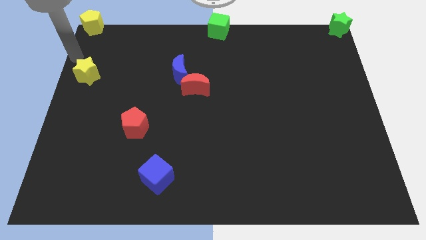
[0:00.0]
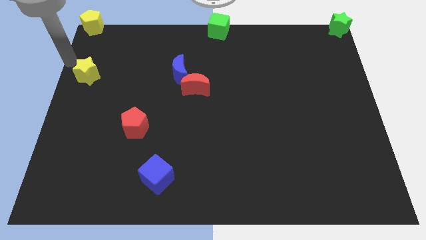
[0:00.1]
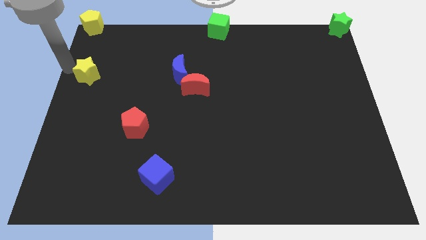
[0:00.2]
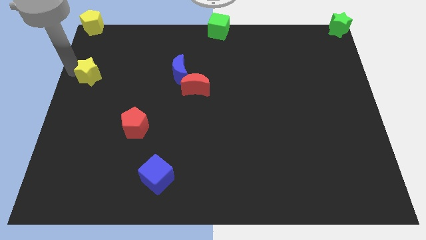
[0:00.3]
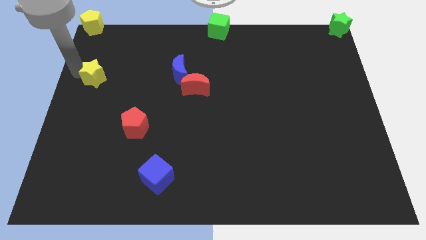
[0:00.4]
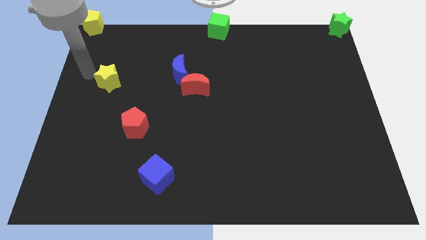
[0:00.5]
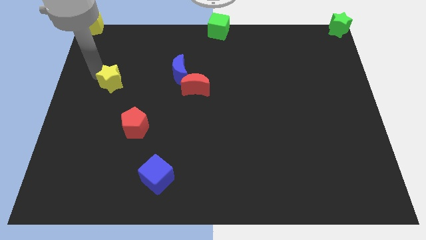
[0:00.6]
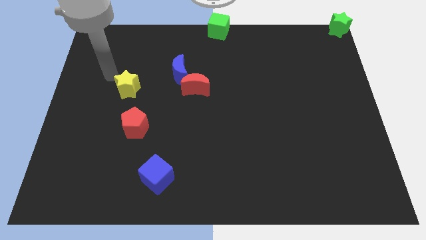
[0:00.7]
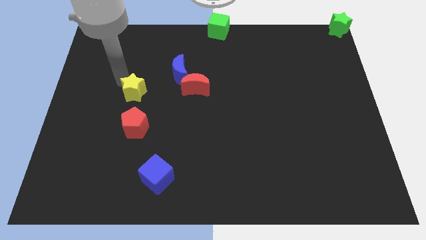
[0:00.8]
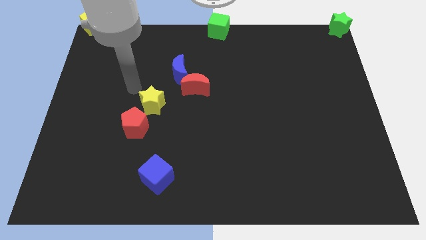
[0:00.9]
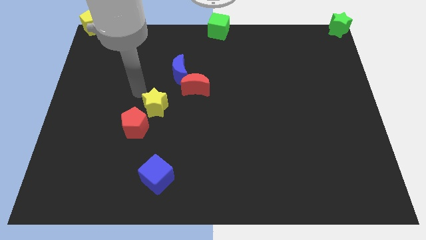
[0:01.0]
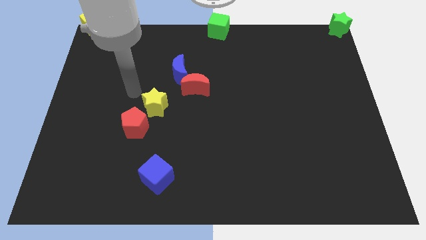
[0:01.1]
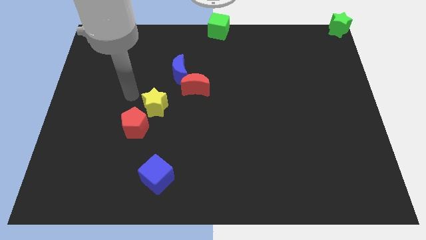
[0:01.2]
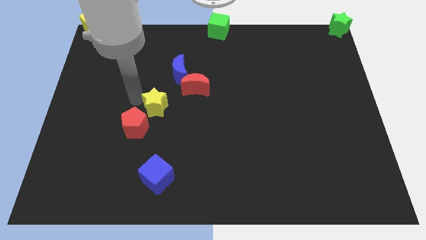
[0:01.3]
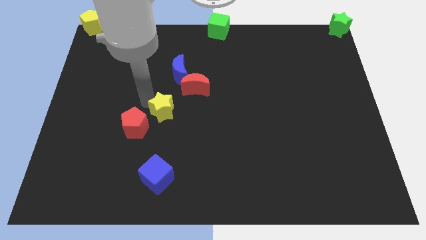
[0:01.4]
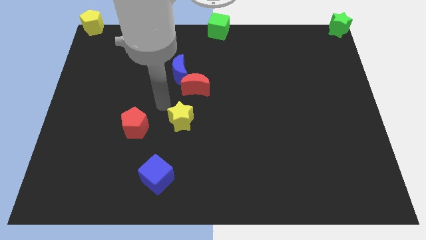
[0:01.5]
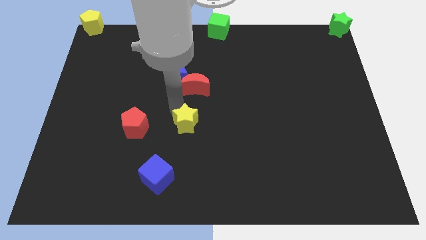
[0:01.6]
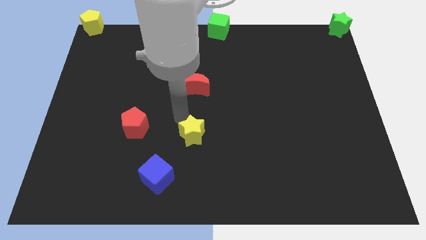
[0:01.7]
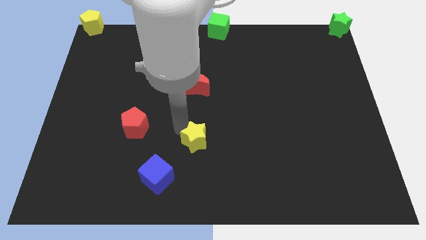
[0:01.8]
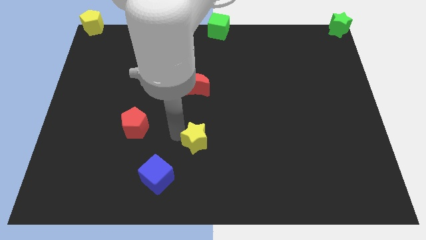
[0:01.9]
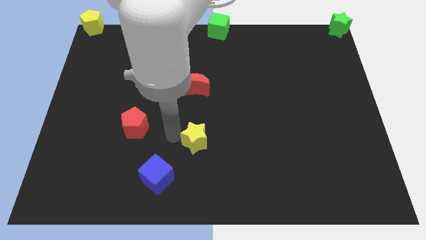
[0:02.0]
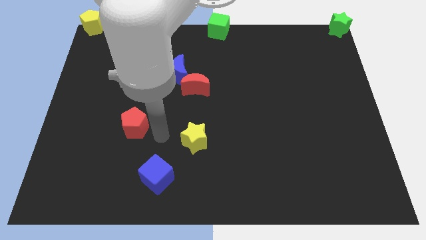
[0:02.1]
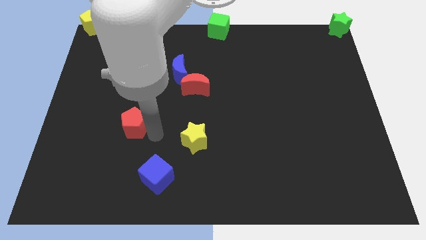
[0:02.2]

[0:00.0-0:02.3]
slide yellow star to the center

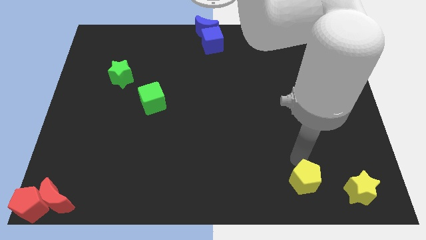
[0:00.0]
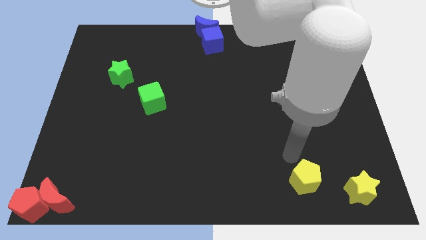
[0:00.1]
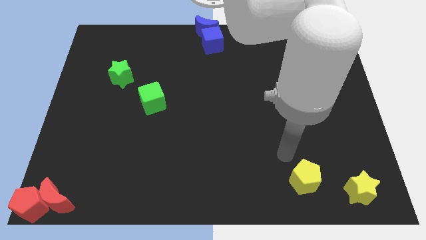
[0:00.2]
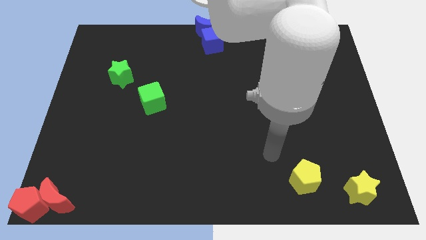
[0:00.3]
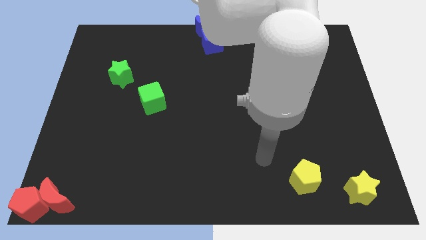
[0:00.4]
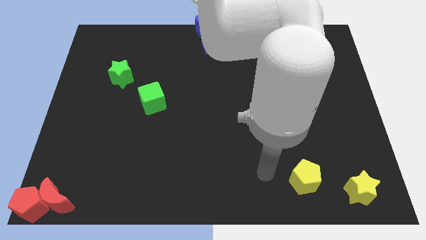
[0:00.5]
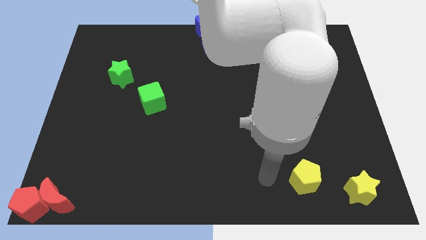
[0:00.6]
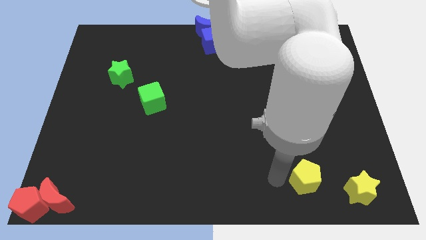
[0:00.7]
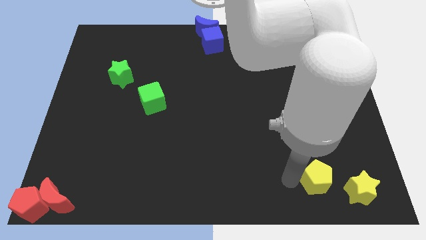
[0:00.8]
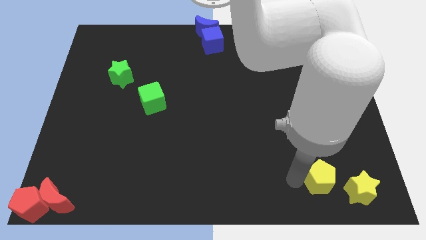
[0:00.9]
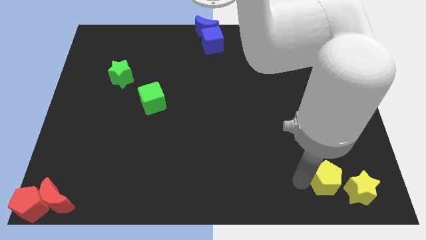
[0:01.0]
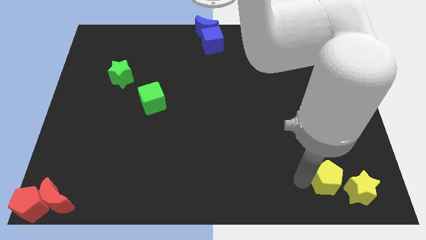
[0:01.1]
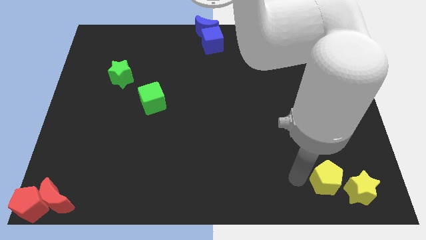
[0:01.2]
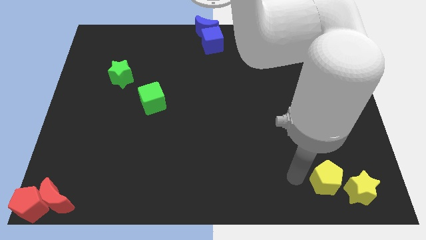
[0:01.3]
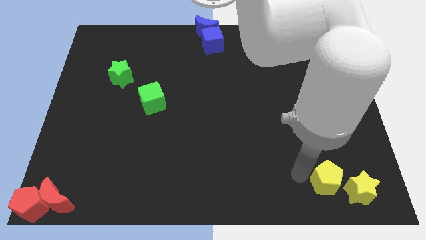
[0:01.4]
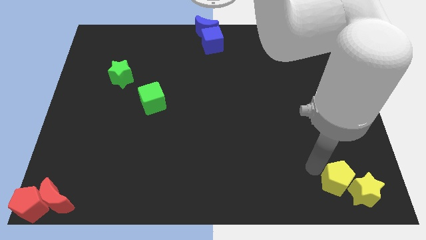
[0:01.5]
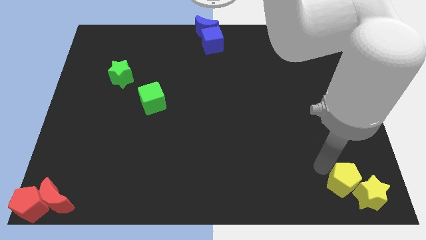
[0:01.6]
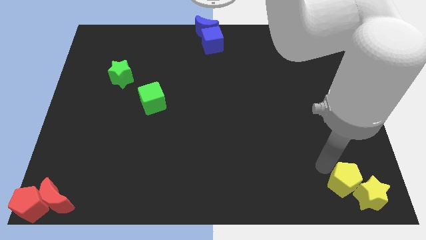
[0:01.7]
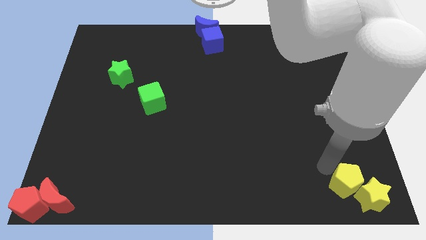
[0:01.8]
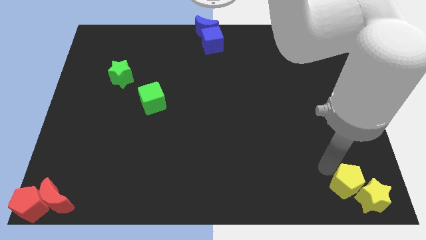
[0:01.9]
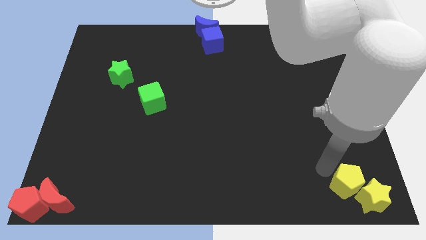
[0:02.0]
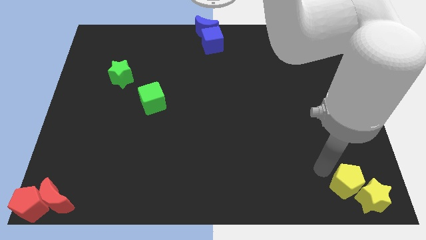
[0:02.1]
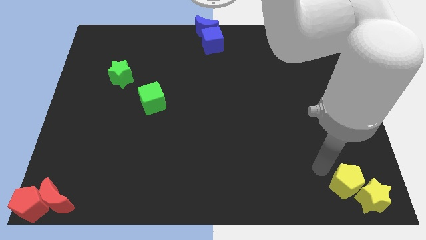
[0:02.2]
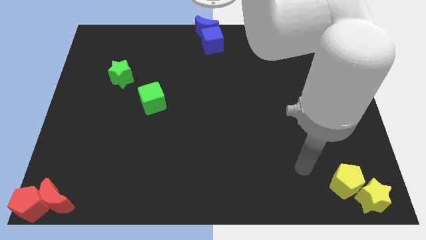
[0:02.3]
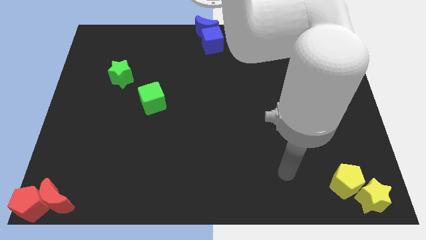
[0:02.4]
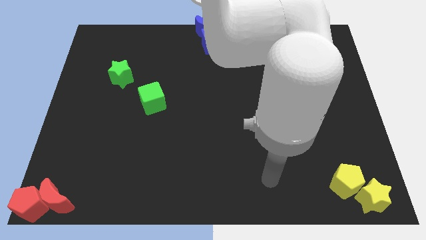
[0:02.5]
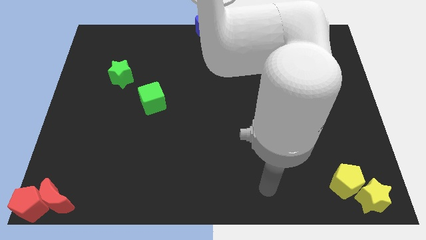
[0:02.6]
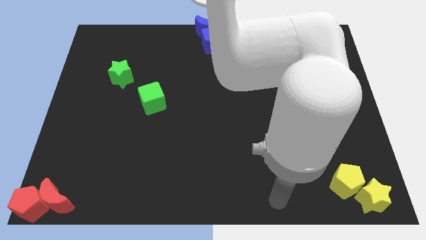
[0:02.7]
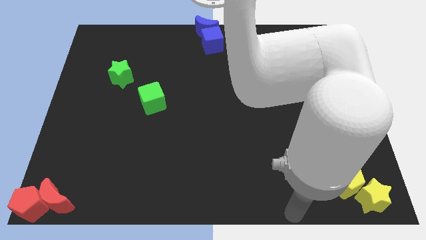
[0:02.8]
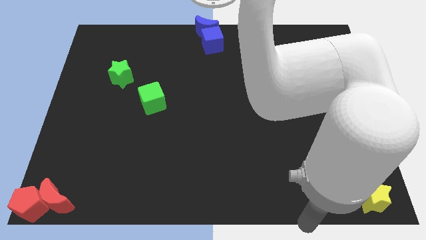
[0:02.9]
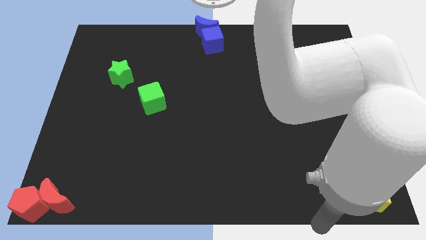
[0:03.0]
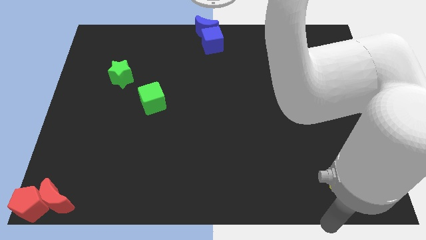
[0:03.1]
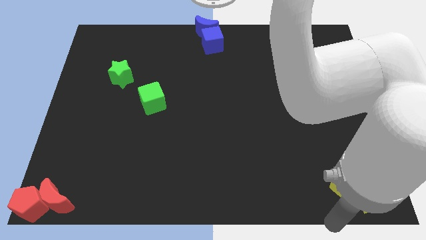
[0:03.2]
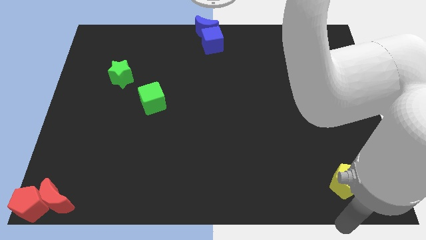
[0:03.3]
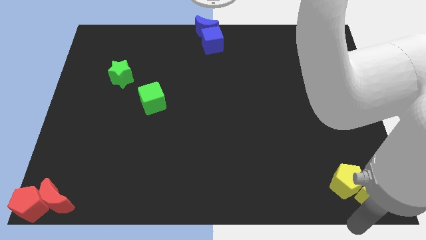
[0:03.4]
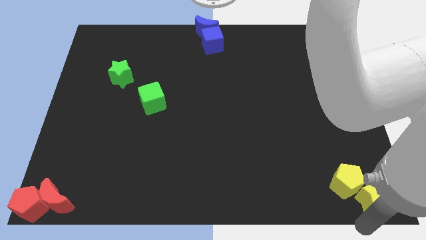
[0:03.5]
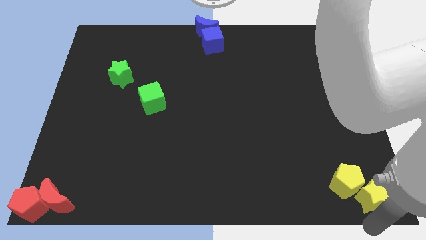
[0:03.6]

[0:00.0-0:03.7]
move both the yellow pentagon and the yellow star to the bottom right side

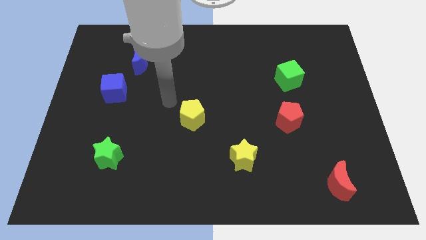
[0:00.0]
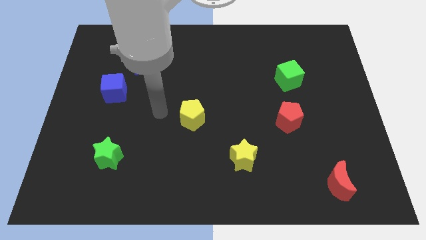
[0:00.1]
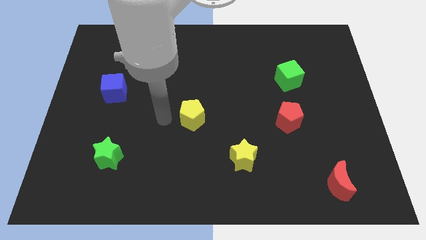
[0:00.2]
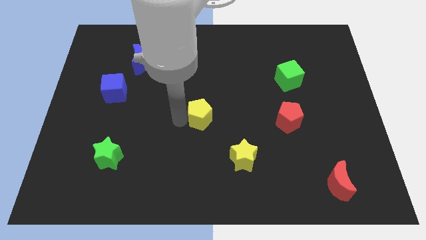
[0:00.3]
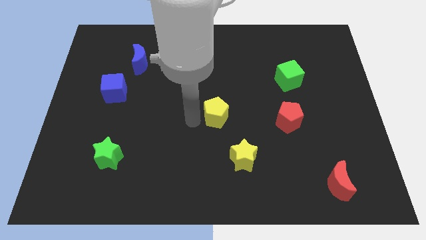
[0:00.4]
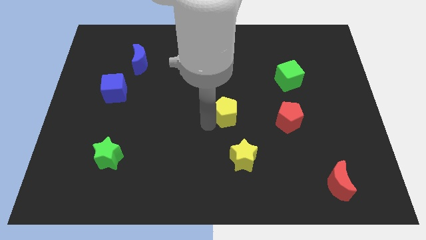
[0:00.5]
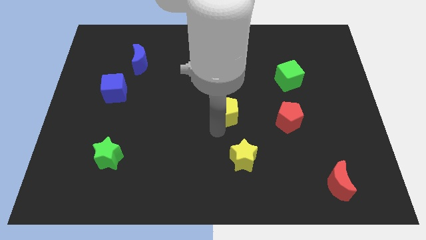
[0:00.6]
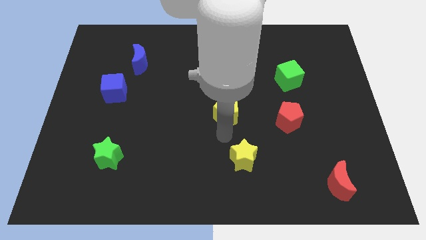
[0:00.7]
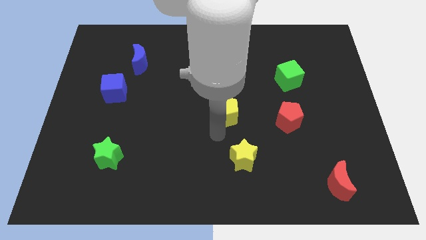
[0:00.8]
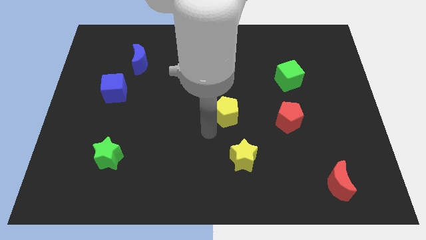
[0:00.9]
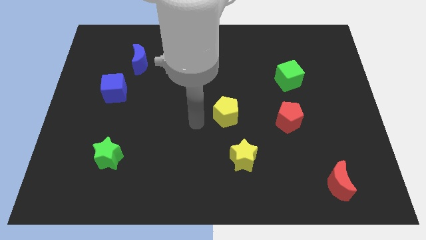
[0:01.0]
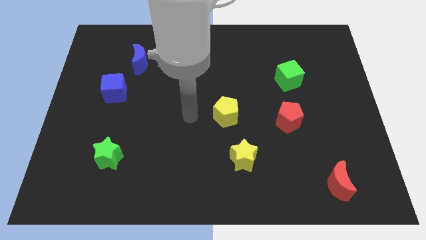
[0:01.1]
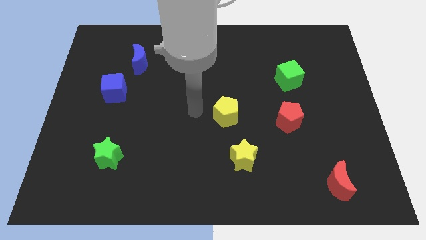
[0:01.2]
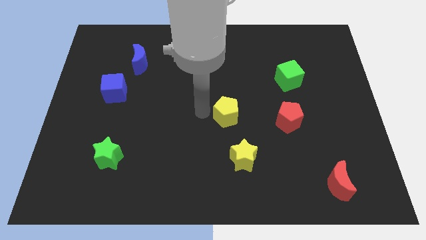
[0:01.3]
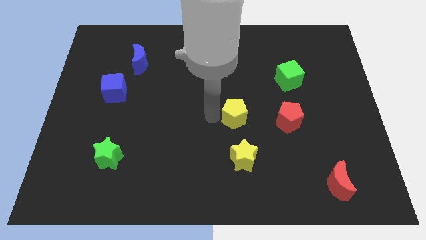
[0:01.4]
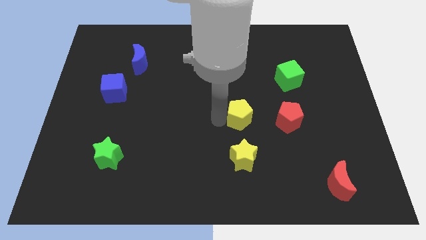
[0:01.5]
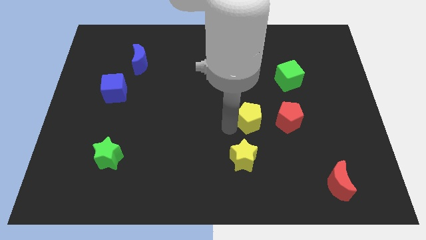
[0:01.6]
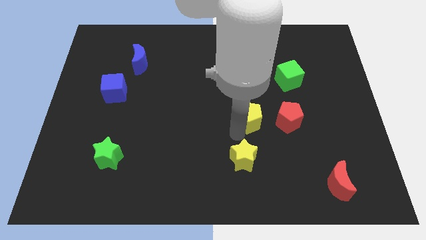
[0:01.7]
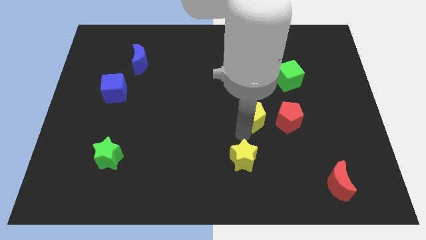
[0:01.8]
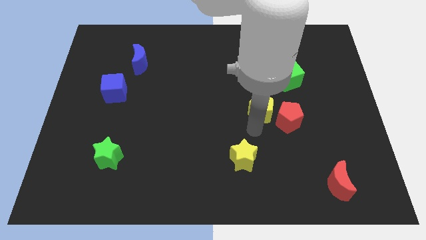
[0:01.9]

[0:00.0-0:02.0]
move the yellow pentagon above the yellow star

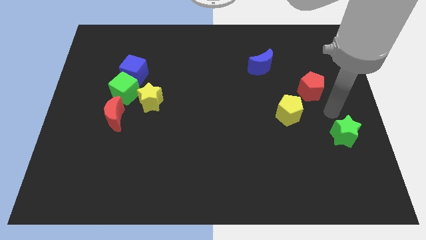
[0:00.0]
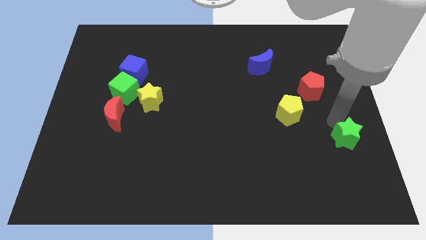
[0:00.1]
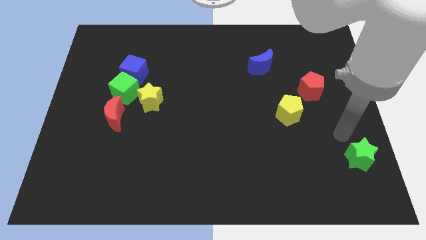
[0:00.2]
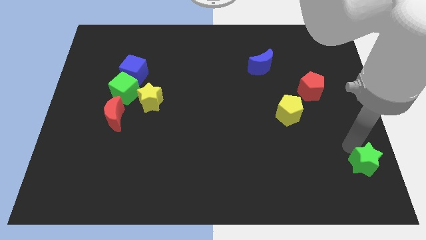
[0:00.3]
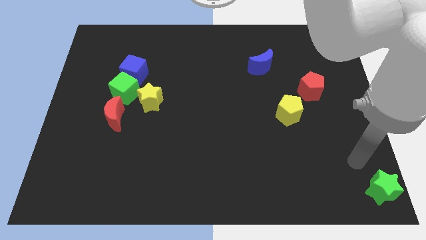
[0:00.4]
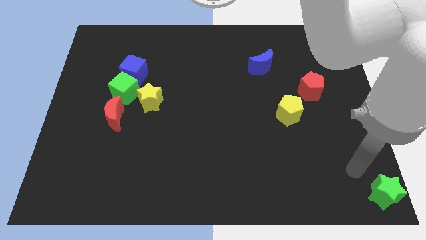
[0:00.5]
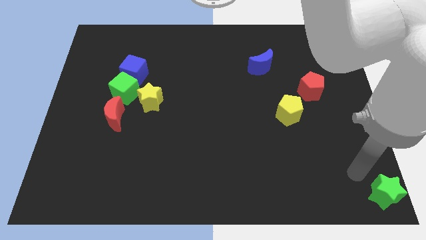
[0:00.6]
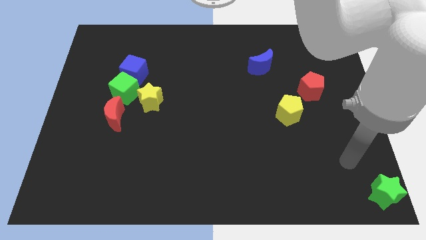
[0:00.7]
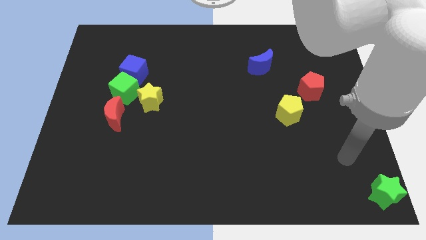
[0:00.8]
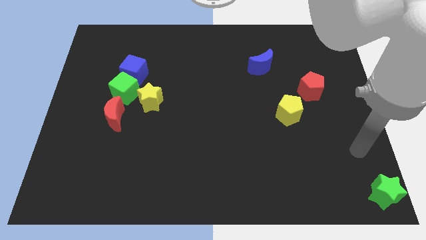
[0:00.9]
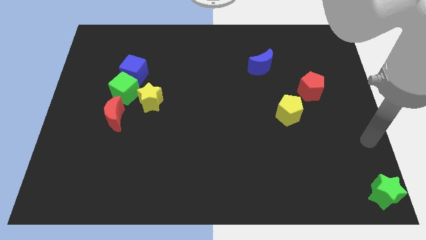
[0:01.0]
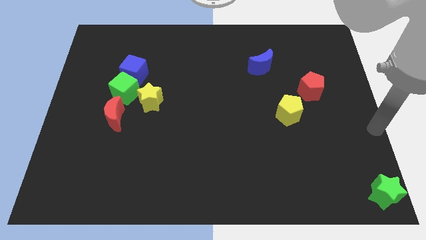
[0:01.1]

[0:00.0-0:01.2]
move the green star to the bottom right corner of the board
